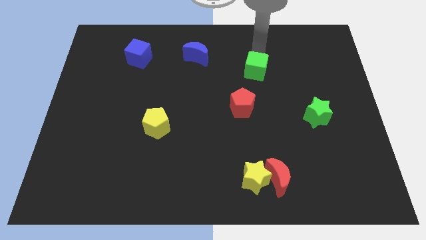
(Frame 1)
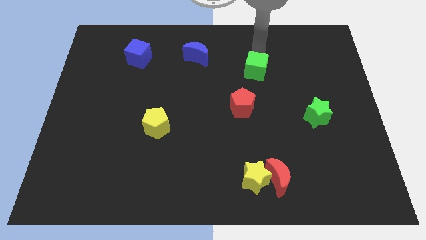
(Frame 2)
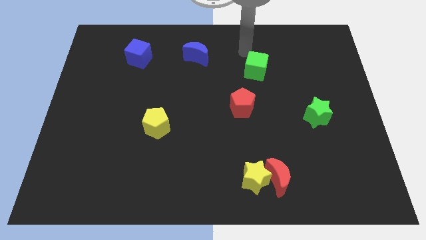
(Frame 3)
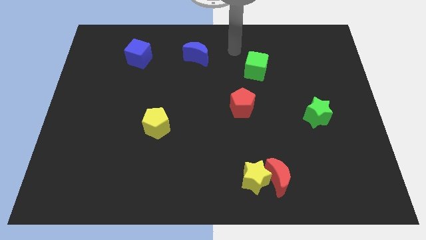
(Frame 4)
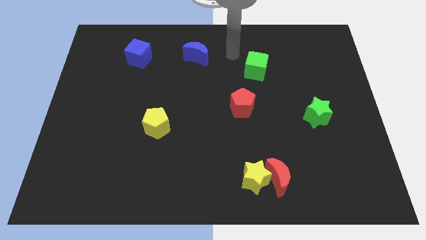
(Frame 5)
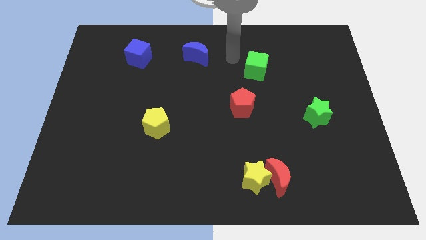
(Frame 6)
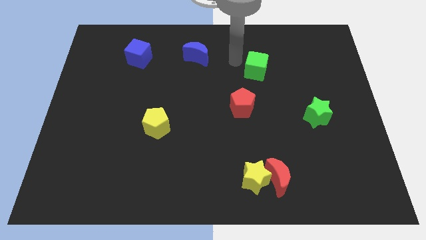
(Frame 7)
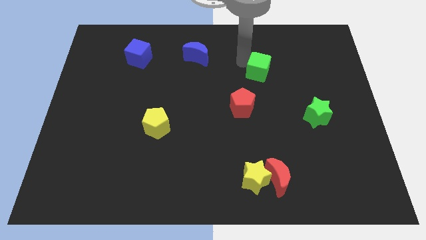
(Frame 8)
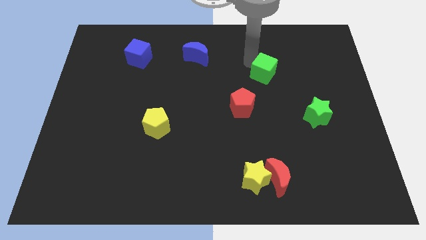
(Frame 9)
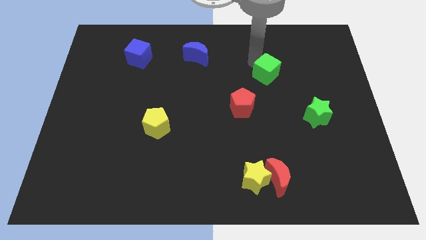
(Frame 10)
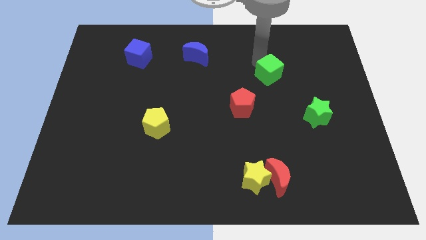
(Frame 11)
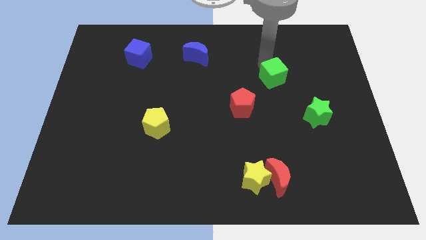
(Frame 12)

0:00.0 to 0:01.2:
push green cube diagonally right above red pentagon

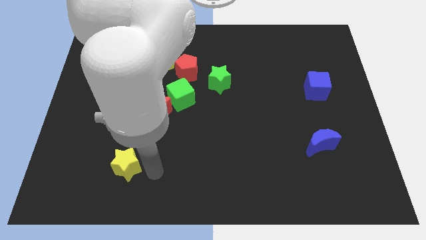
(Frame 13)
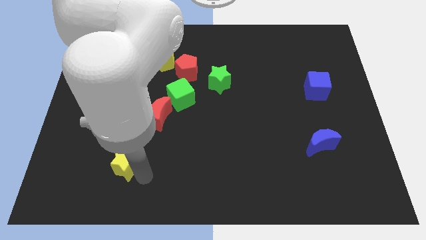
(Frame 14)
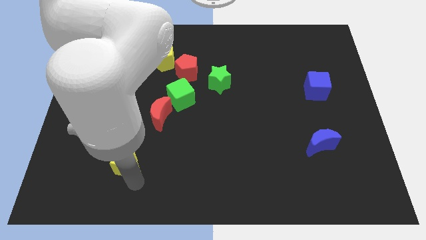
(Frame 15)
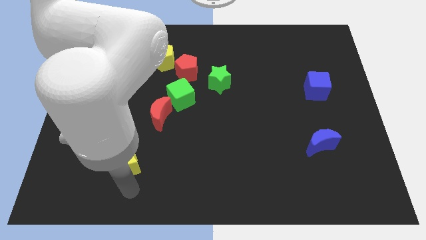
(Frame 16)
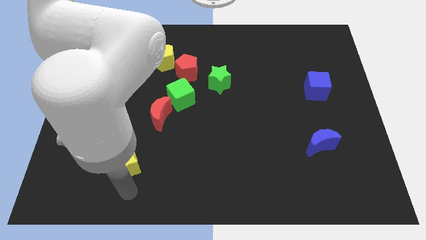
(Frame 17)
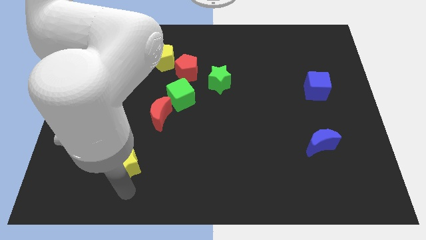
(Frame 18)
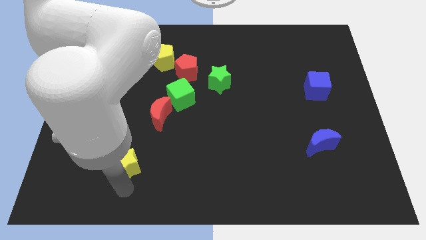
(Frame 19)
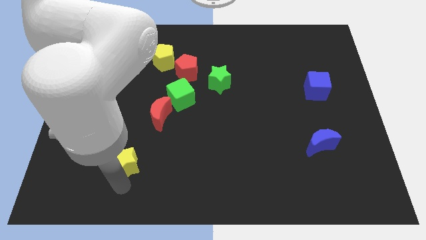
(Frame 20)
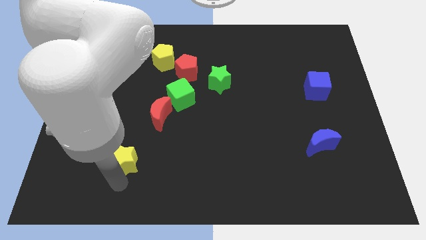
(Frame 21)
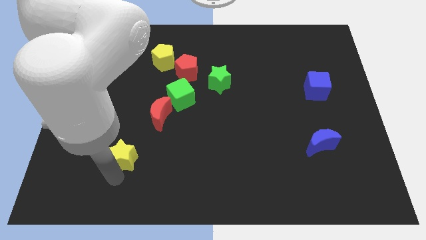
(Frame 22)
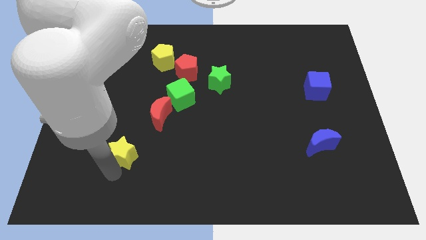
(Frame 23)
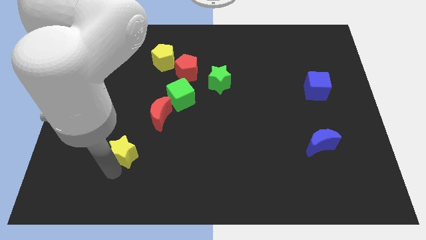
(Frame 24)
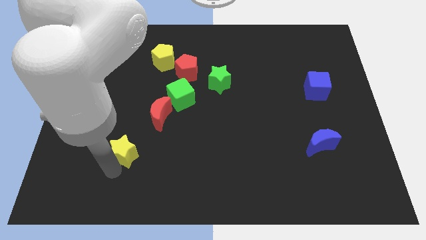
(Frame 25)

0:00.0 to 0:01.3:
touch the bottom of yellow star

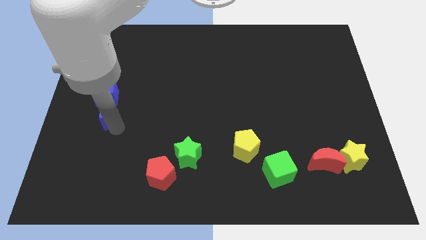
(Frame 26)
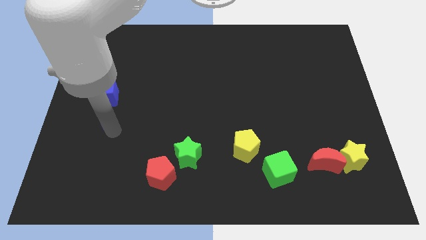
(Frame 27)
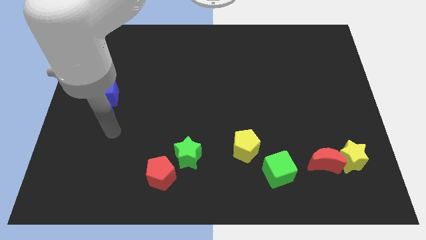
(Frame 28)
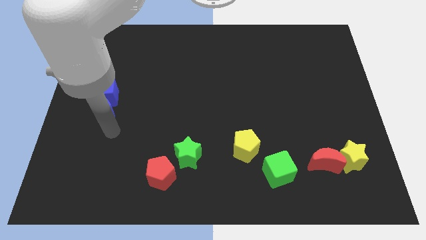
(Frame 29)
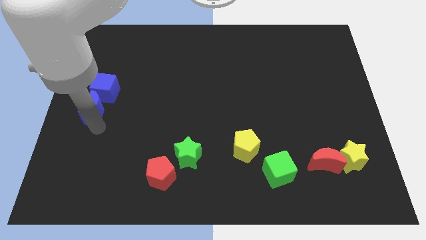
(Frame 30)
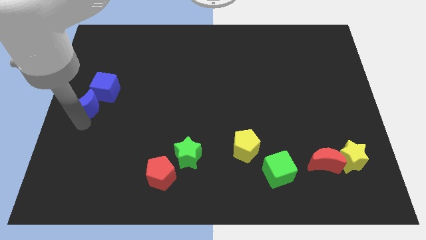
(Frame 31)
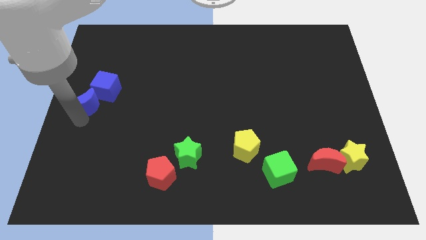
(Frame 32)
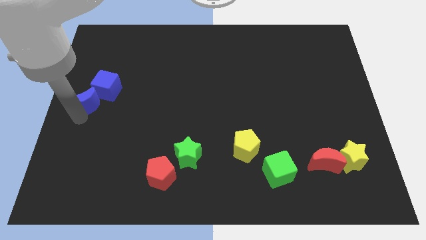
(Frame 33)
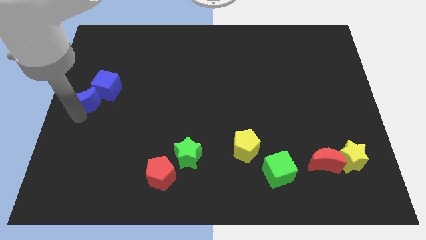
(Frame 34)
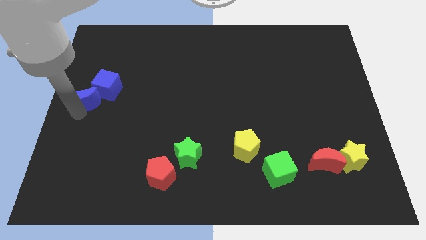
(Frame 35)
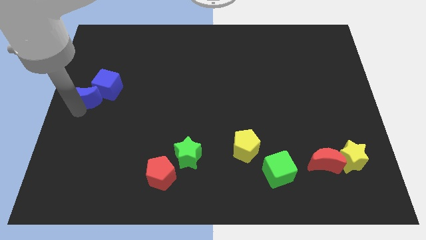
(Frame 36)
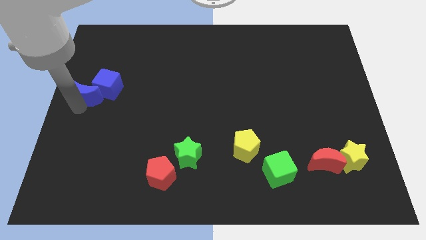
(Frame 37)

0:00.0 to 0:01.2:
push the blue moon into the blue cube

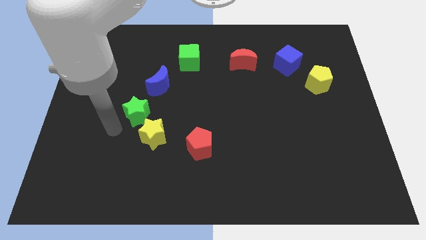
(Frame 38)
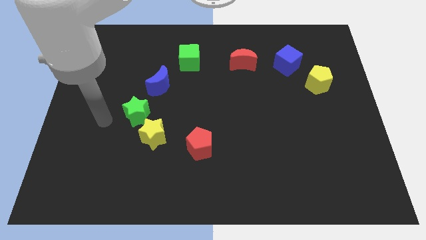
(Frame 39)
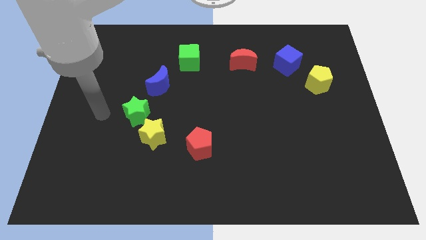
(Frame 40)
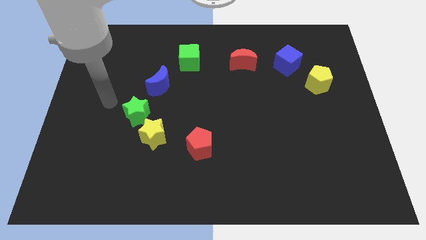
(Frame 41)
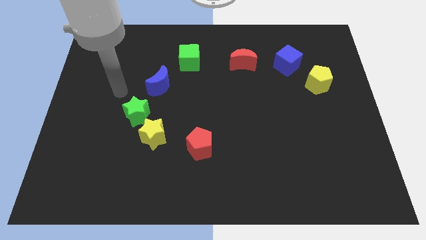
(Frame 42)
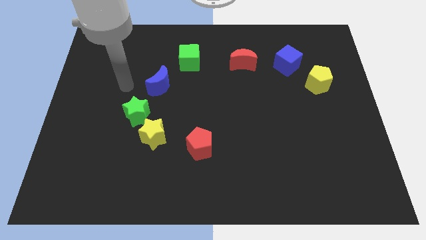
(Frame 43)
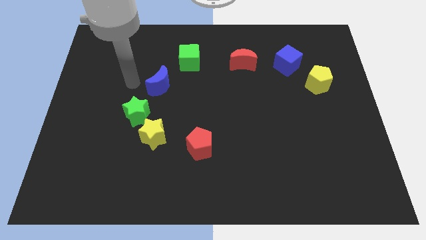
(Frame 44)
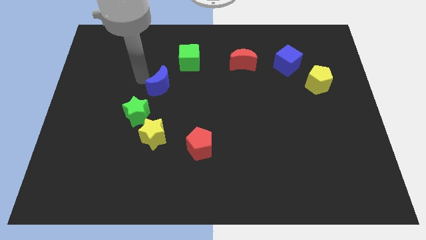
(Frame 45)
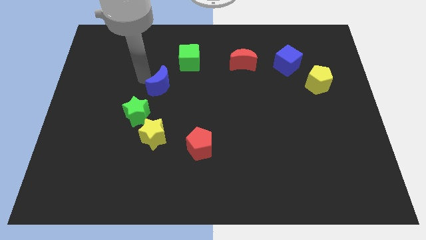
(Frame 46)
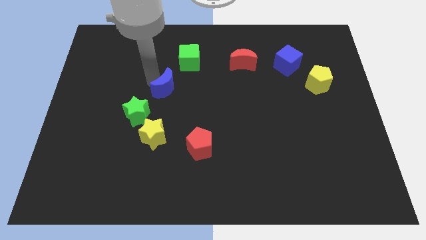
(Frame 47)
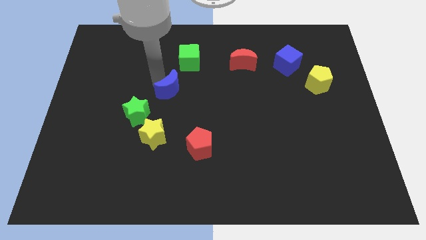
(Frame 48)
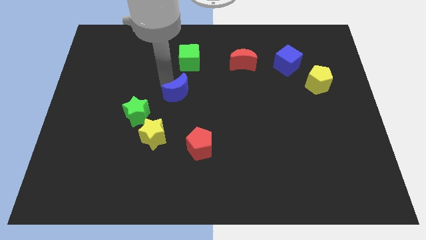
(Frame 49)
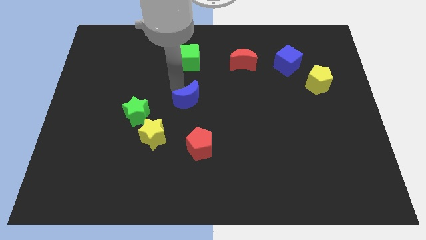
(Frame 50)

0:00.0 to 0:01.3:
push the blue moon to the bottom side of the green cube

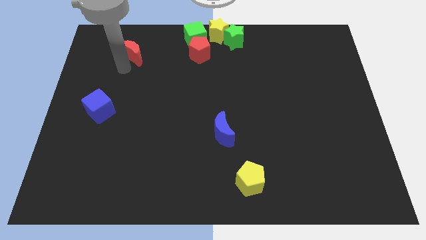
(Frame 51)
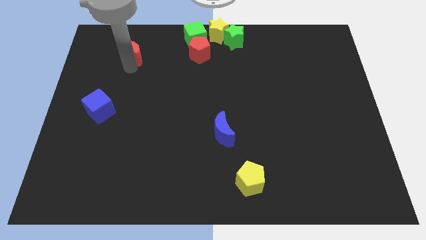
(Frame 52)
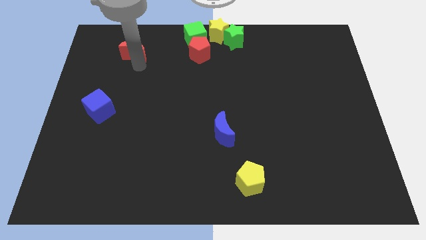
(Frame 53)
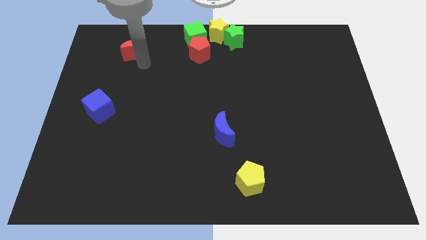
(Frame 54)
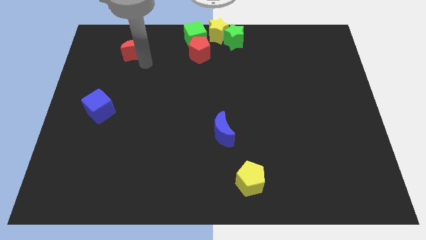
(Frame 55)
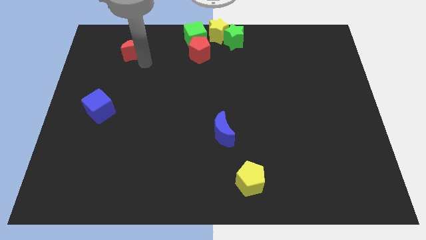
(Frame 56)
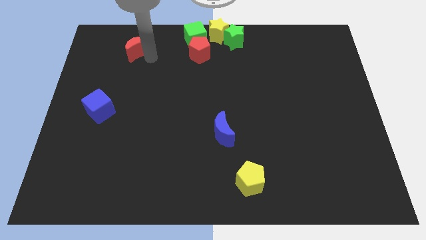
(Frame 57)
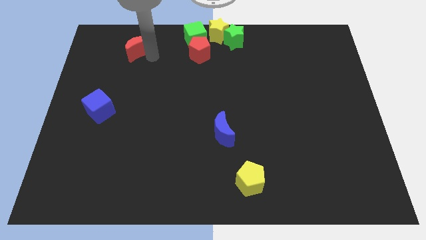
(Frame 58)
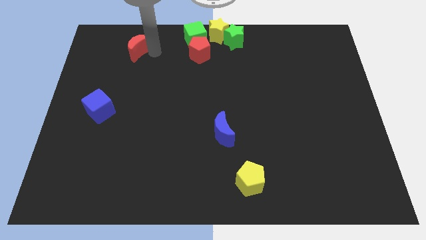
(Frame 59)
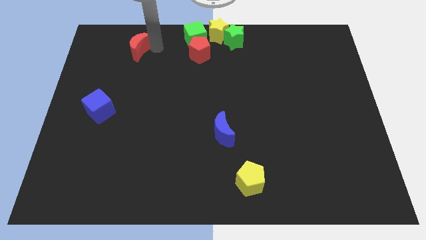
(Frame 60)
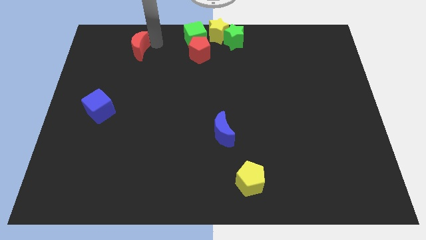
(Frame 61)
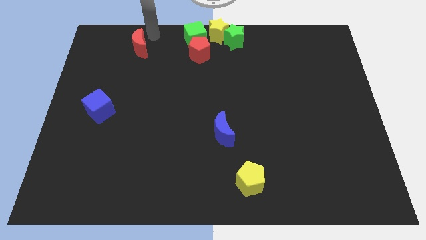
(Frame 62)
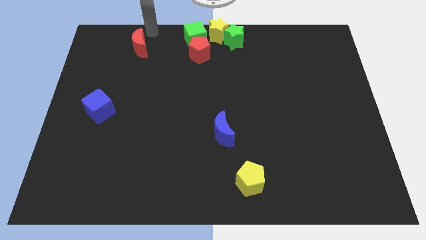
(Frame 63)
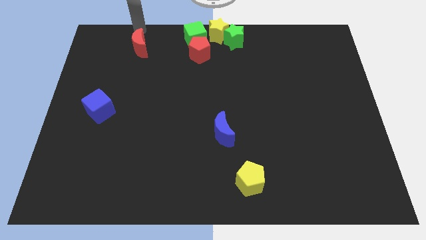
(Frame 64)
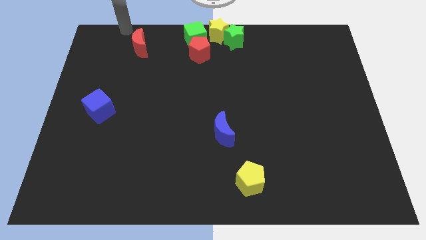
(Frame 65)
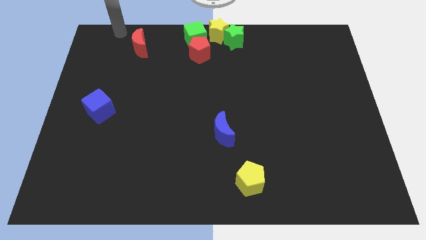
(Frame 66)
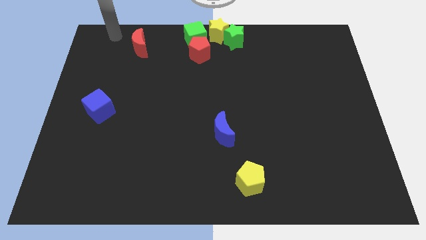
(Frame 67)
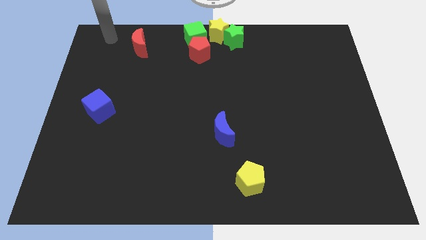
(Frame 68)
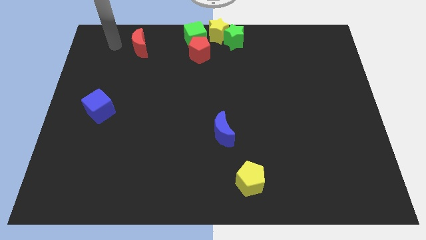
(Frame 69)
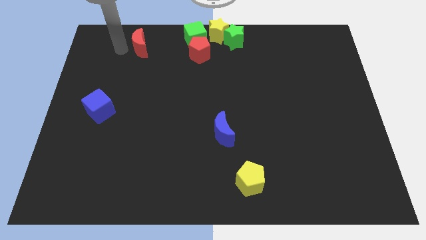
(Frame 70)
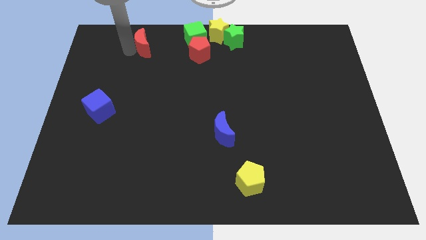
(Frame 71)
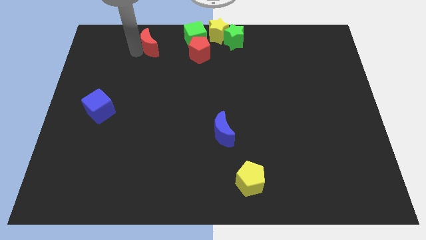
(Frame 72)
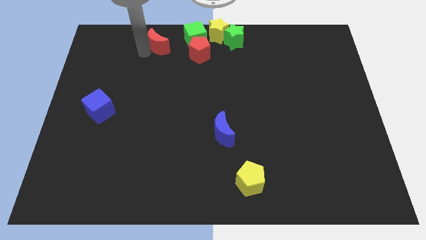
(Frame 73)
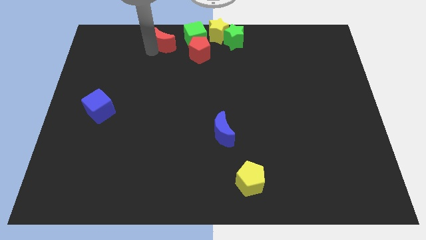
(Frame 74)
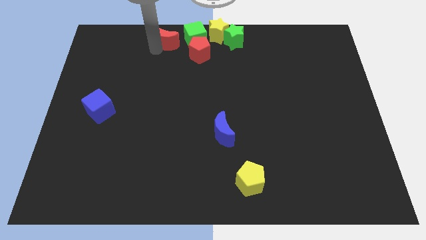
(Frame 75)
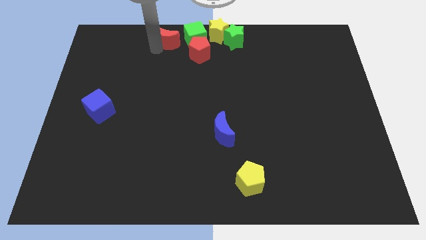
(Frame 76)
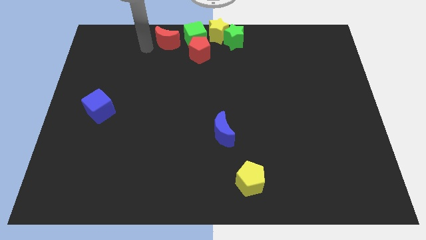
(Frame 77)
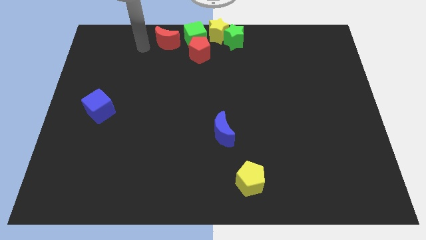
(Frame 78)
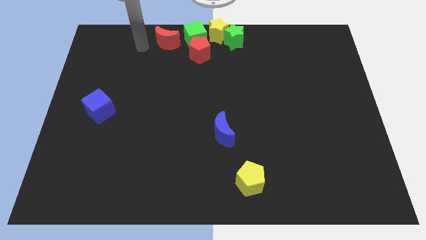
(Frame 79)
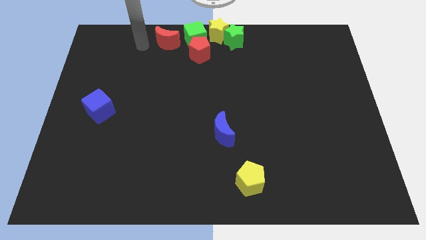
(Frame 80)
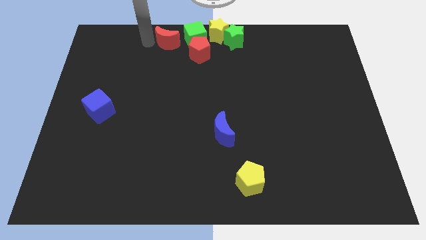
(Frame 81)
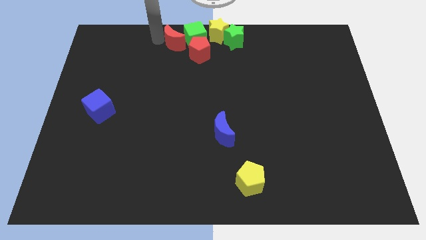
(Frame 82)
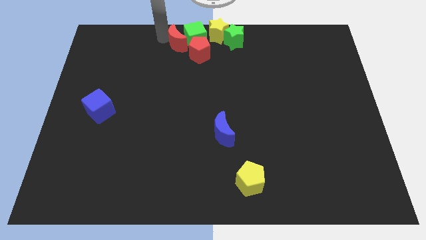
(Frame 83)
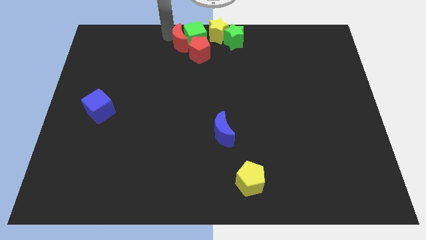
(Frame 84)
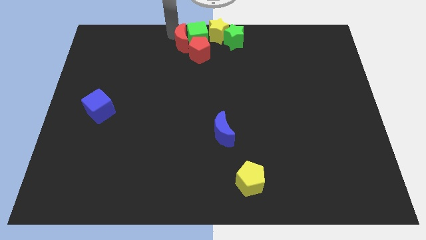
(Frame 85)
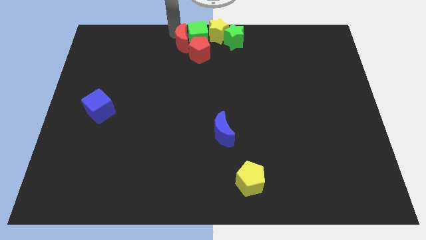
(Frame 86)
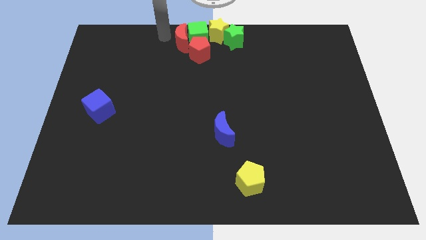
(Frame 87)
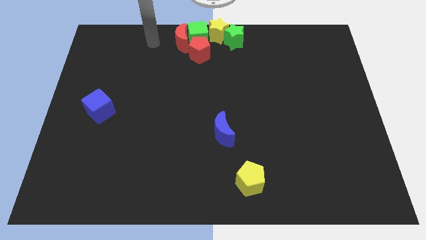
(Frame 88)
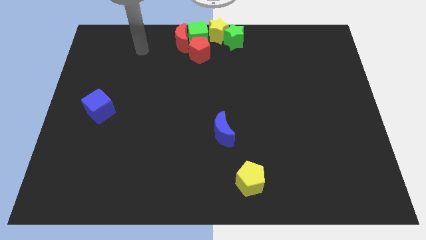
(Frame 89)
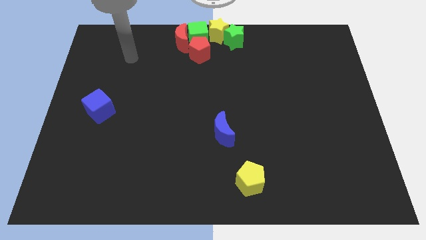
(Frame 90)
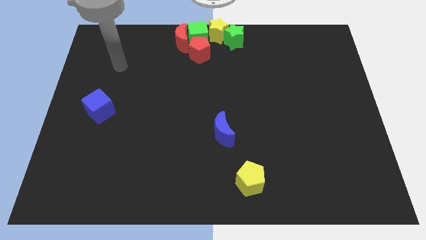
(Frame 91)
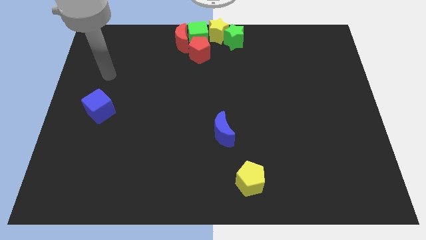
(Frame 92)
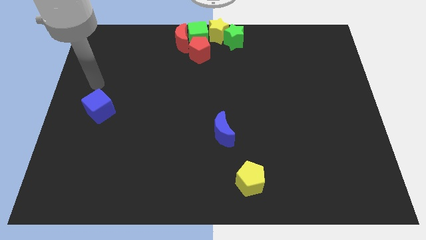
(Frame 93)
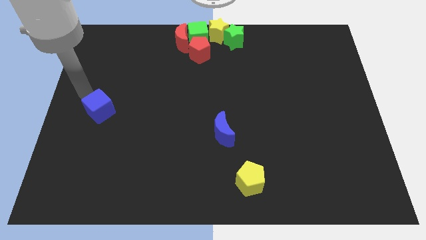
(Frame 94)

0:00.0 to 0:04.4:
move the red crescent to the left of the green cube
